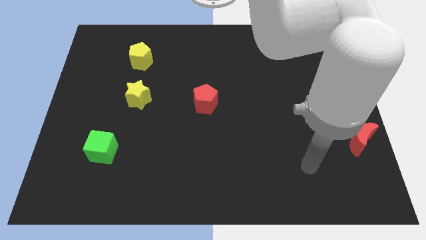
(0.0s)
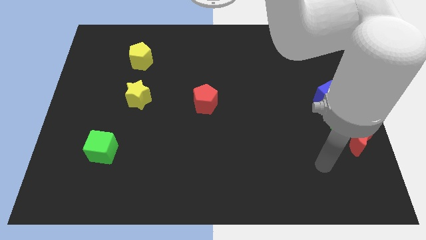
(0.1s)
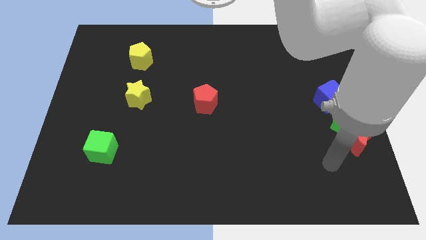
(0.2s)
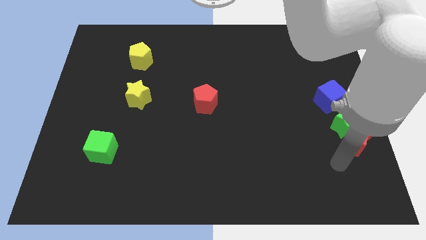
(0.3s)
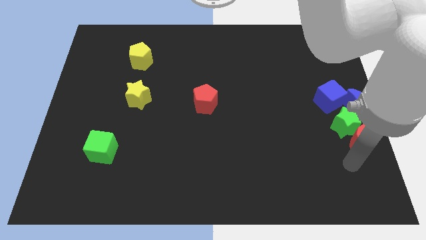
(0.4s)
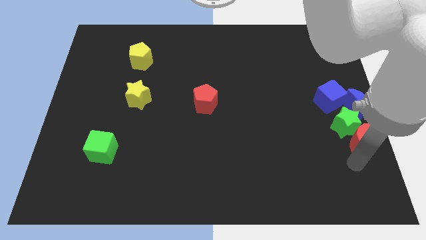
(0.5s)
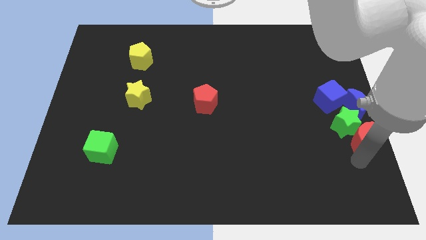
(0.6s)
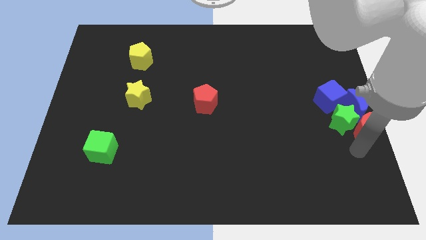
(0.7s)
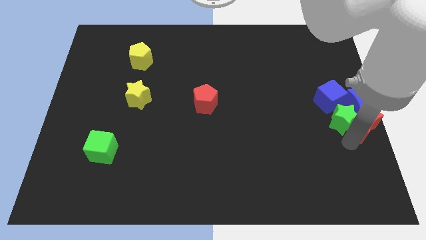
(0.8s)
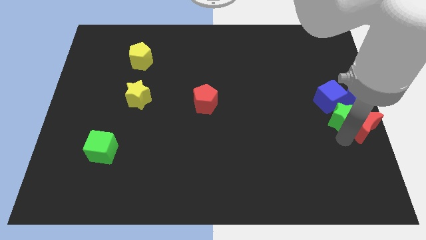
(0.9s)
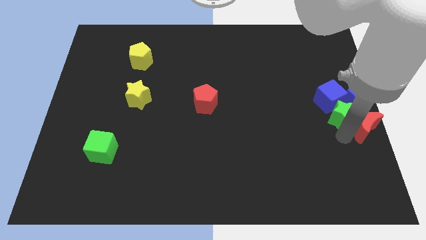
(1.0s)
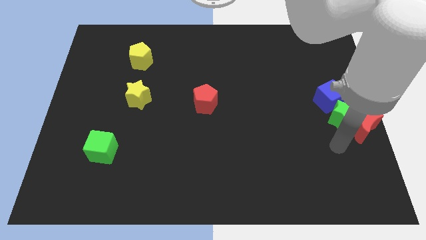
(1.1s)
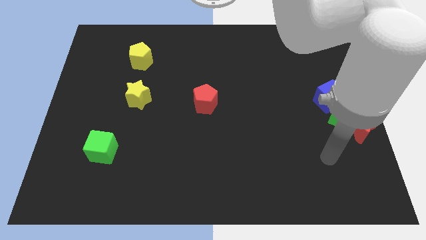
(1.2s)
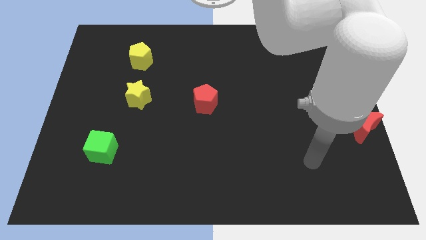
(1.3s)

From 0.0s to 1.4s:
slide the green star below to the blue cube

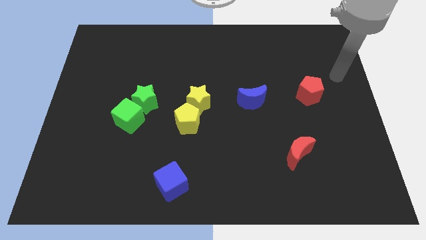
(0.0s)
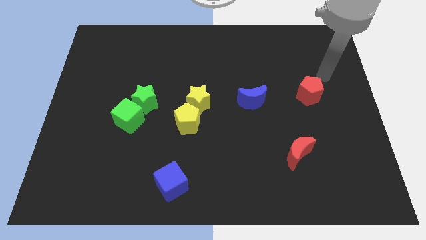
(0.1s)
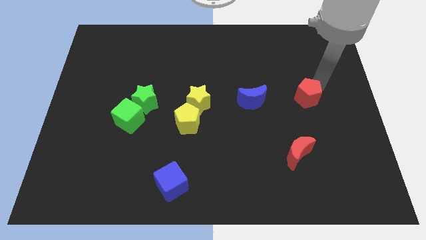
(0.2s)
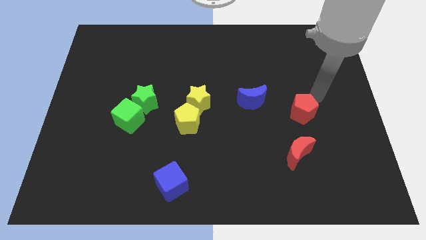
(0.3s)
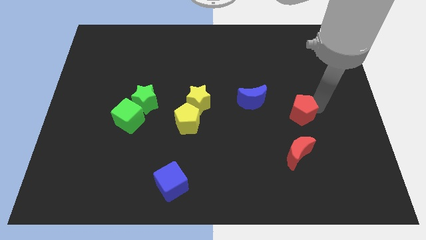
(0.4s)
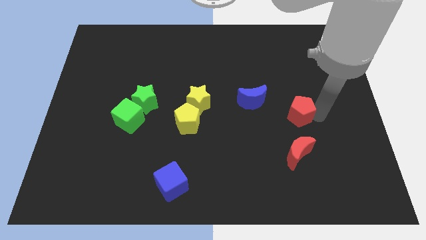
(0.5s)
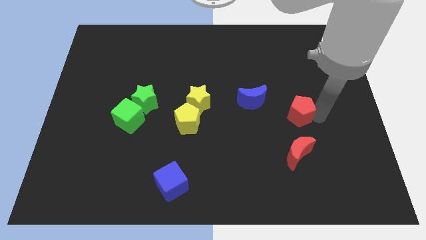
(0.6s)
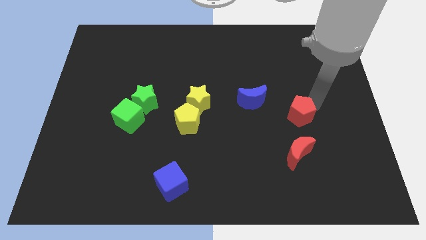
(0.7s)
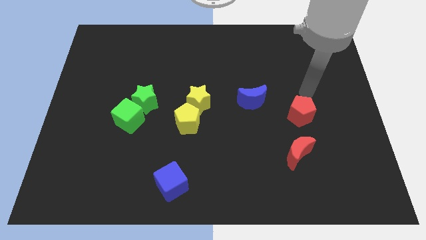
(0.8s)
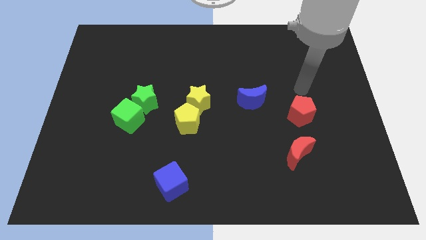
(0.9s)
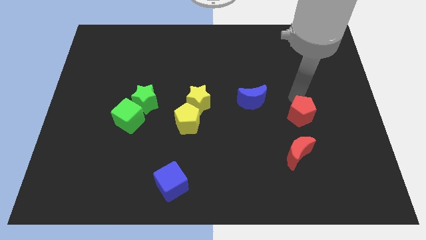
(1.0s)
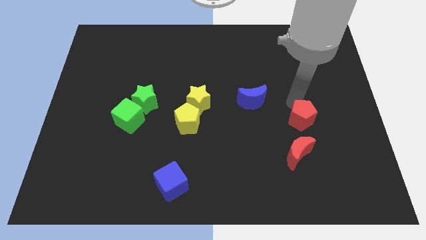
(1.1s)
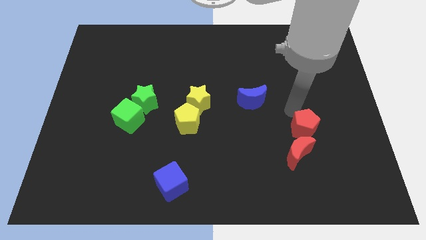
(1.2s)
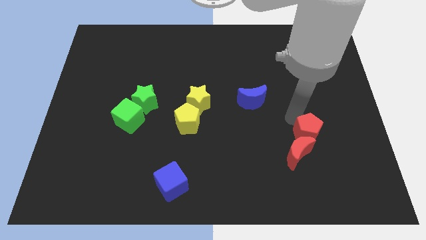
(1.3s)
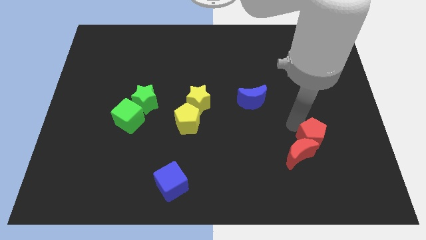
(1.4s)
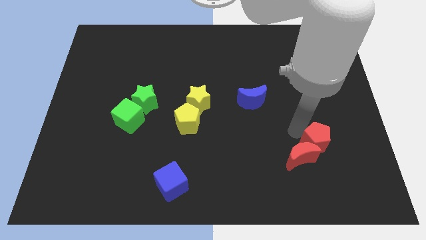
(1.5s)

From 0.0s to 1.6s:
push the red pentagon into red crescent

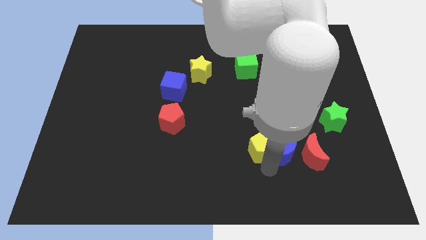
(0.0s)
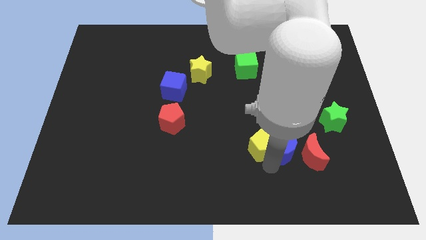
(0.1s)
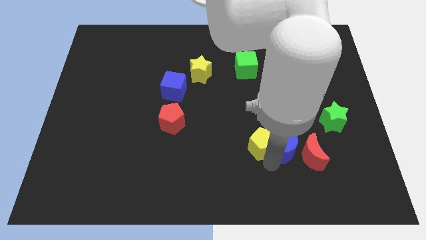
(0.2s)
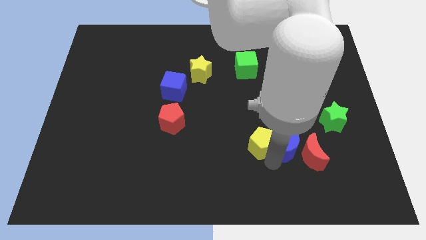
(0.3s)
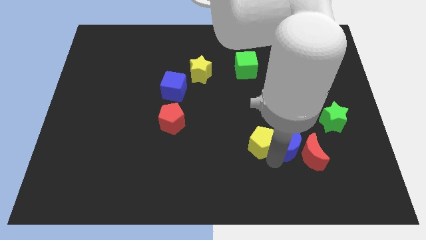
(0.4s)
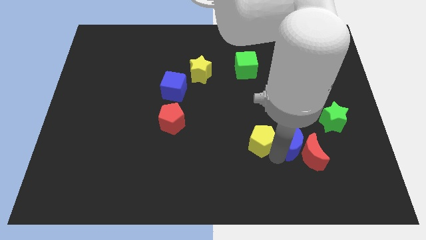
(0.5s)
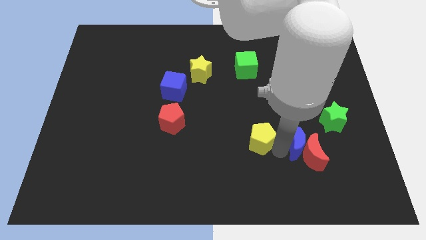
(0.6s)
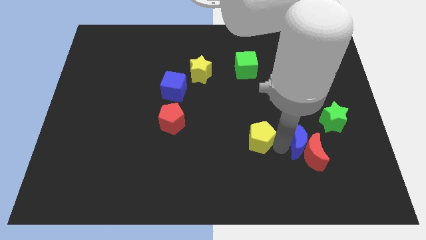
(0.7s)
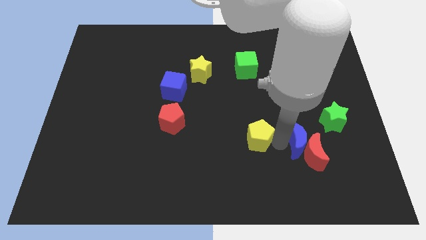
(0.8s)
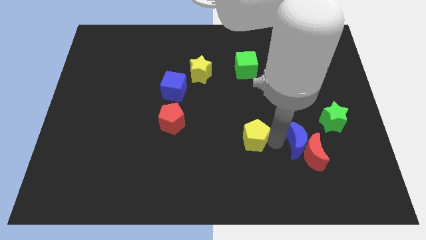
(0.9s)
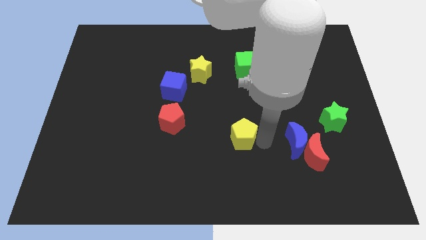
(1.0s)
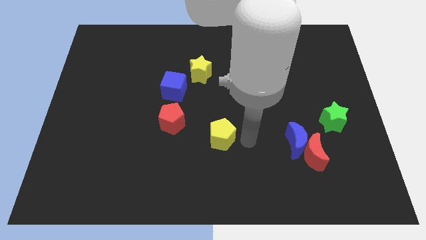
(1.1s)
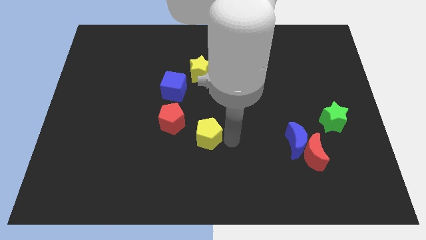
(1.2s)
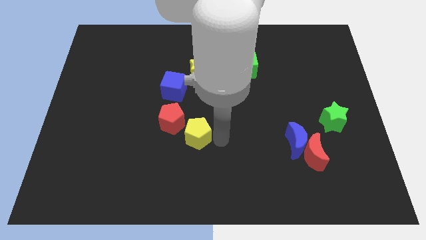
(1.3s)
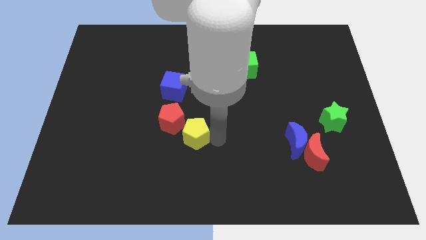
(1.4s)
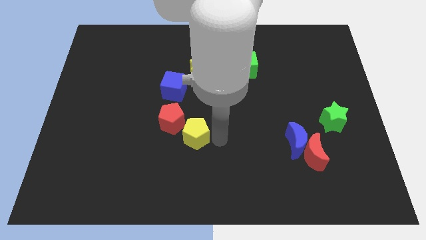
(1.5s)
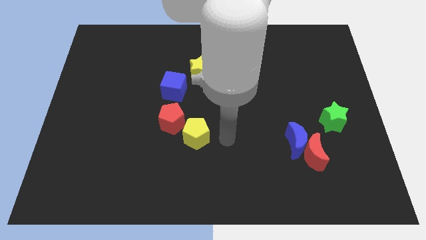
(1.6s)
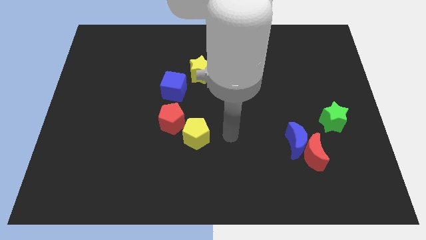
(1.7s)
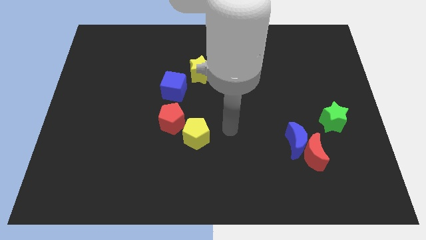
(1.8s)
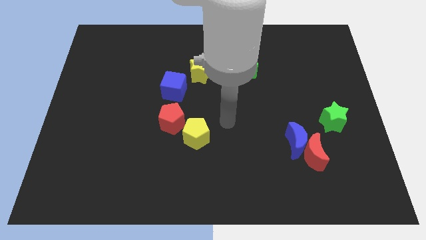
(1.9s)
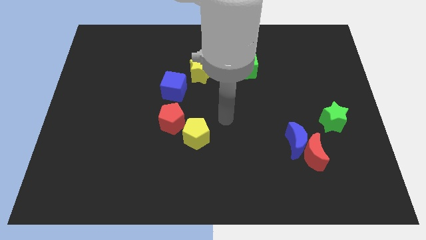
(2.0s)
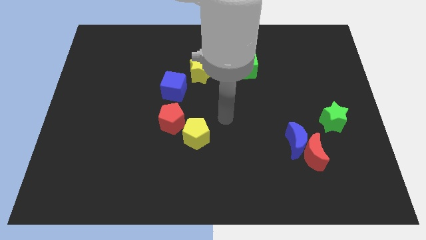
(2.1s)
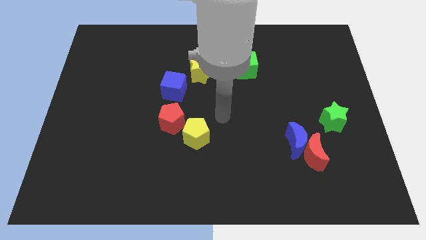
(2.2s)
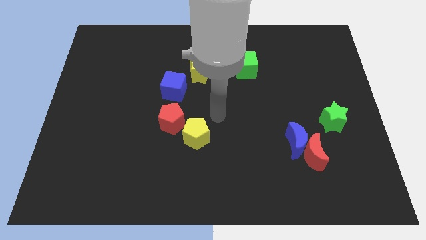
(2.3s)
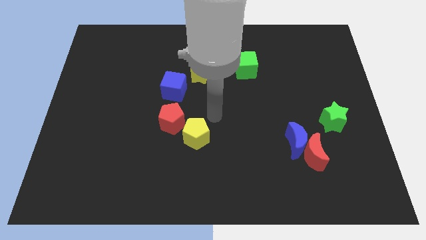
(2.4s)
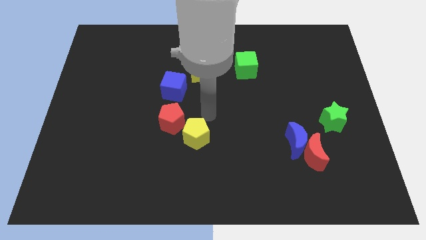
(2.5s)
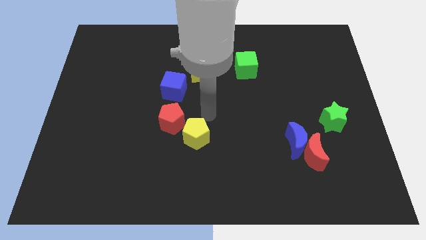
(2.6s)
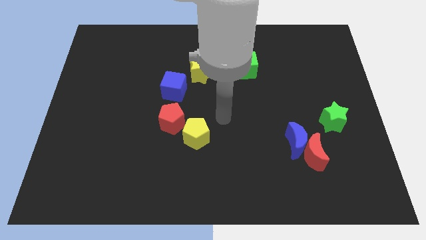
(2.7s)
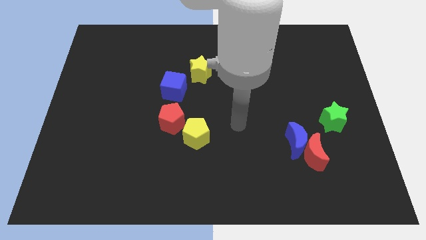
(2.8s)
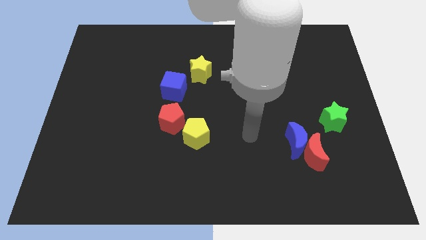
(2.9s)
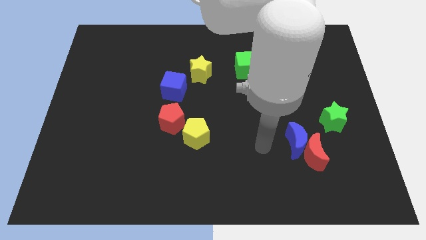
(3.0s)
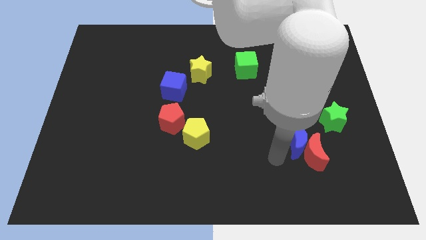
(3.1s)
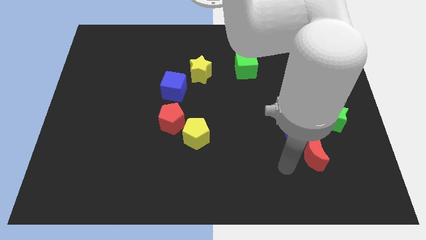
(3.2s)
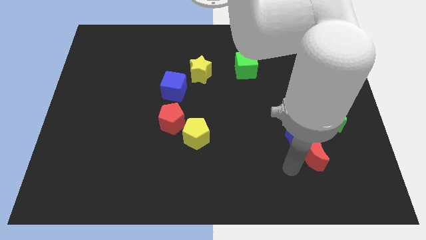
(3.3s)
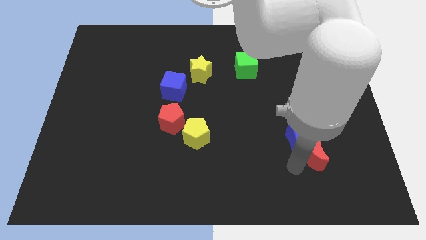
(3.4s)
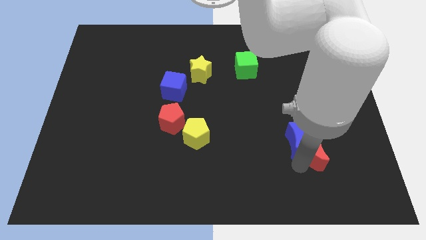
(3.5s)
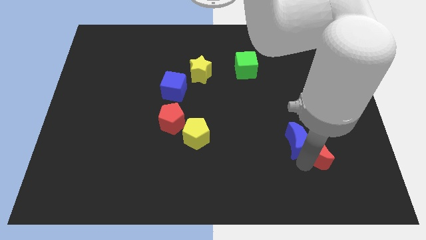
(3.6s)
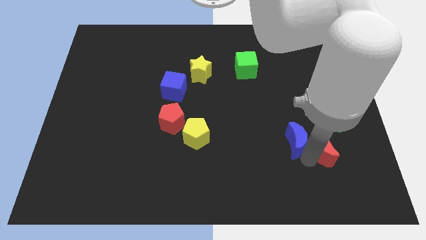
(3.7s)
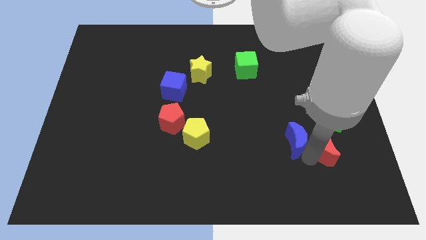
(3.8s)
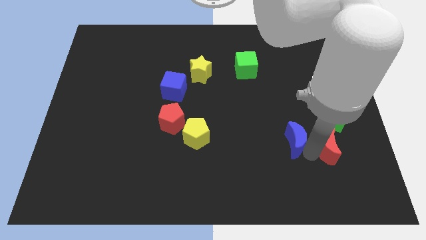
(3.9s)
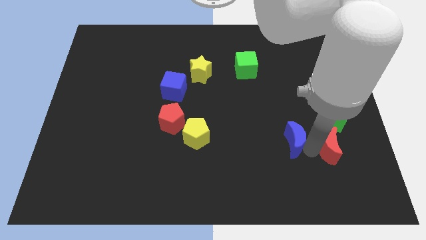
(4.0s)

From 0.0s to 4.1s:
move the yellow pentagon and place it close to the red yellow pentagon

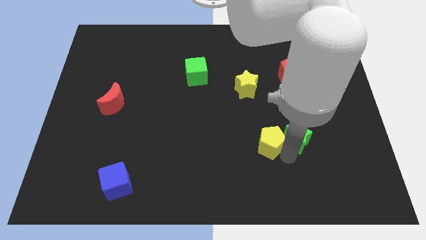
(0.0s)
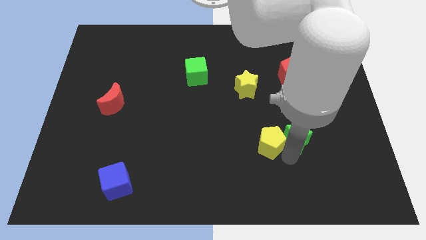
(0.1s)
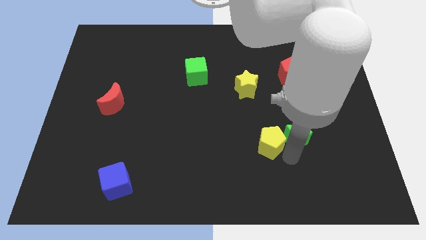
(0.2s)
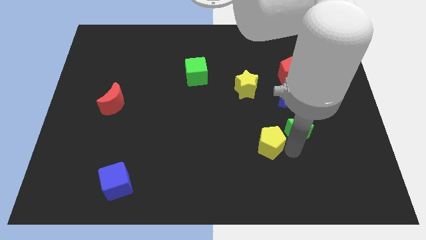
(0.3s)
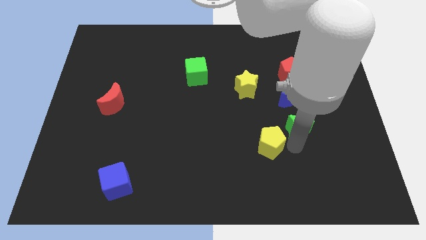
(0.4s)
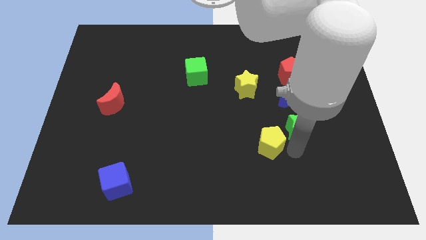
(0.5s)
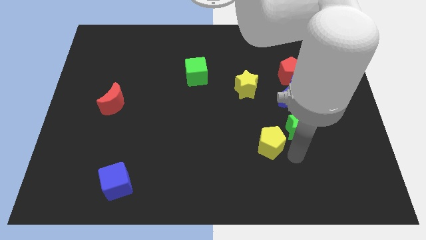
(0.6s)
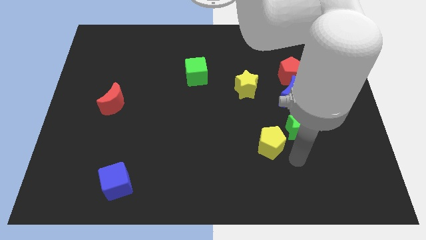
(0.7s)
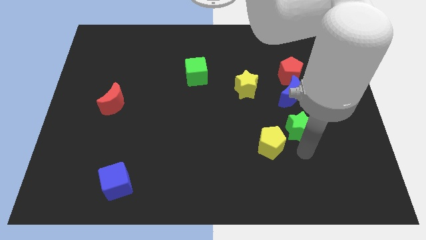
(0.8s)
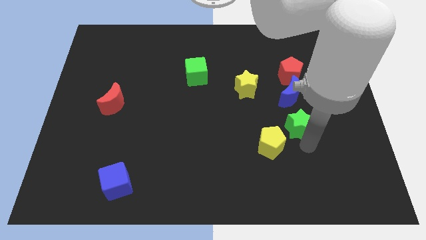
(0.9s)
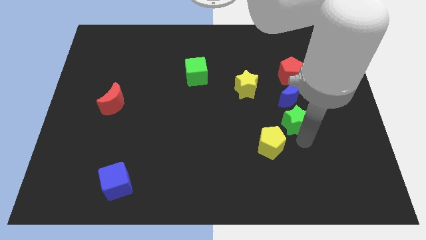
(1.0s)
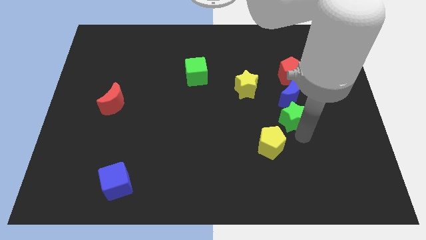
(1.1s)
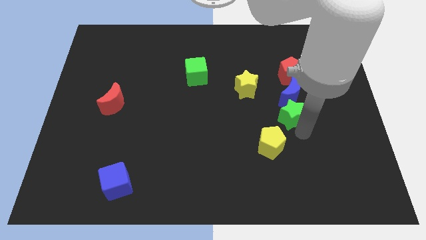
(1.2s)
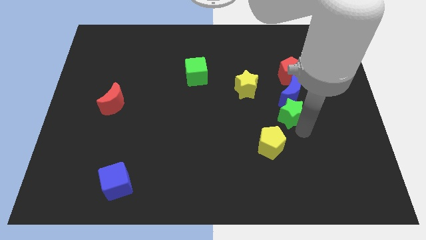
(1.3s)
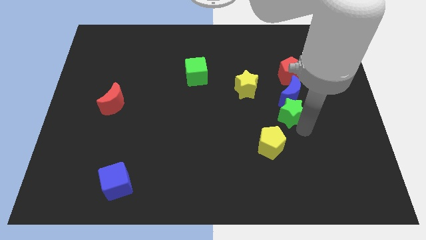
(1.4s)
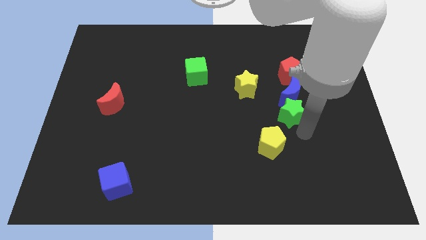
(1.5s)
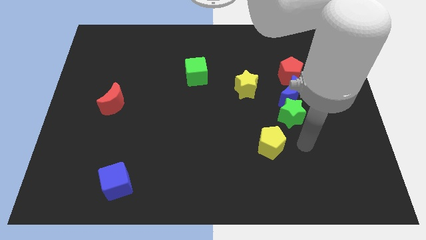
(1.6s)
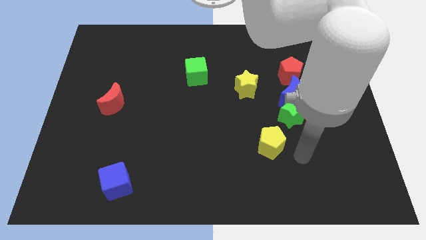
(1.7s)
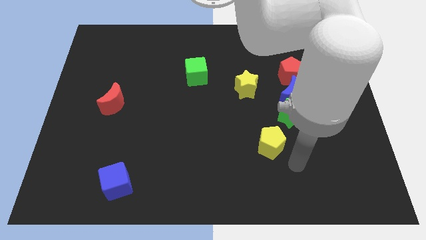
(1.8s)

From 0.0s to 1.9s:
push the green star near to the blue moon

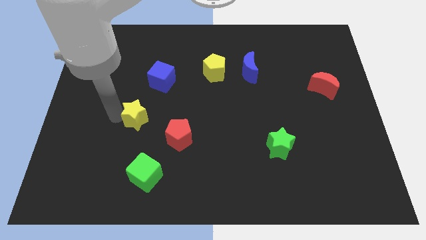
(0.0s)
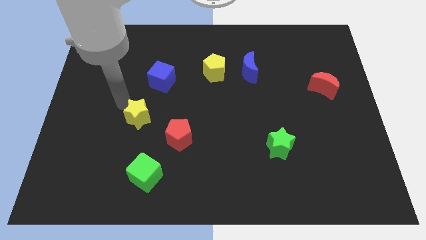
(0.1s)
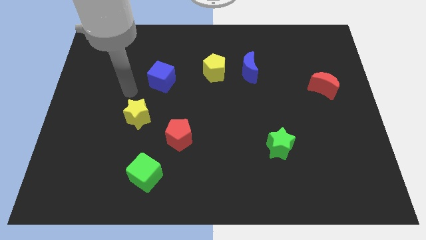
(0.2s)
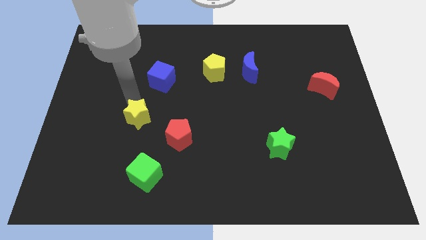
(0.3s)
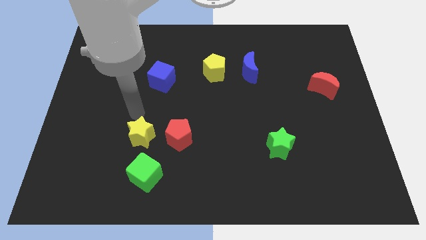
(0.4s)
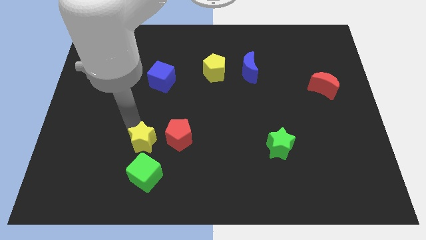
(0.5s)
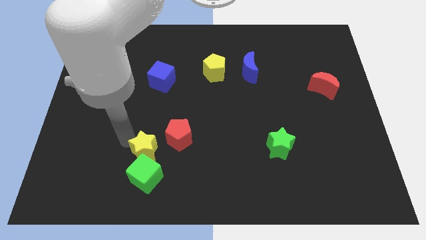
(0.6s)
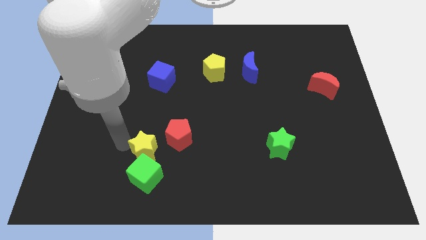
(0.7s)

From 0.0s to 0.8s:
push the yellow star into the green cube
